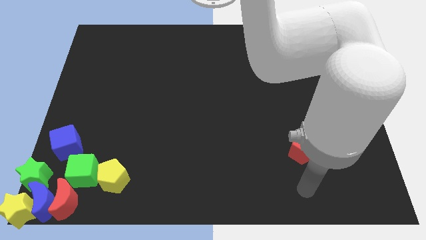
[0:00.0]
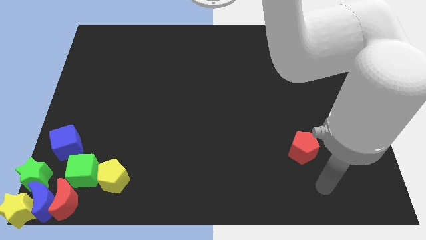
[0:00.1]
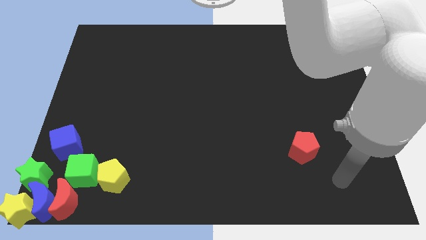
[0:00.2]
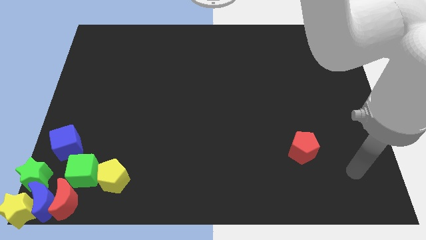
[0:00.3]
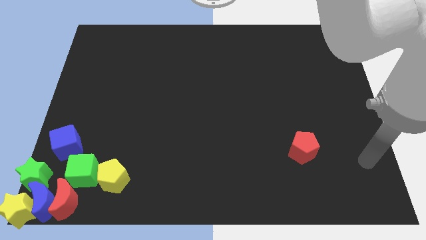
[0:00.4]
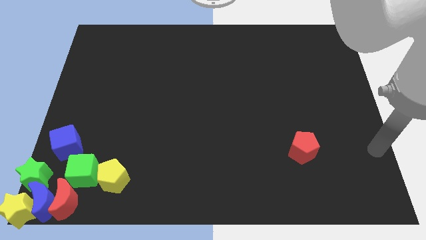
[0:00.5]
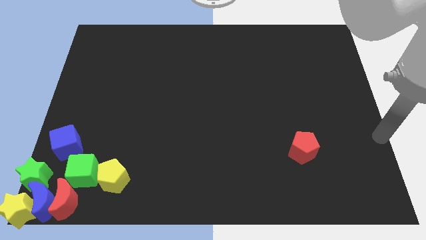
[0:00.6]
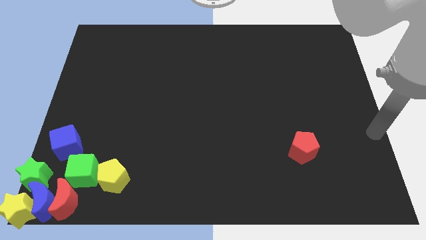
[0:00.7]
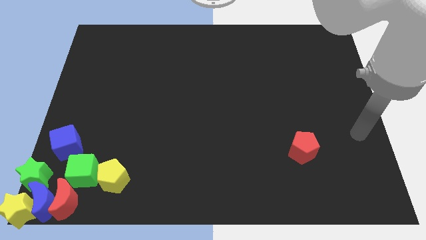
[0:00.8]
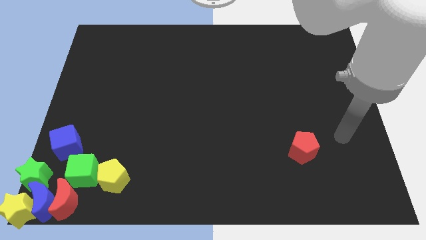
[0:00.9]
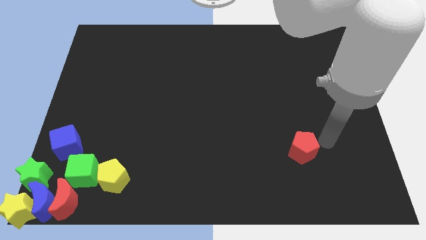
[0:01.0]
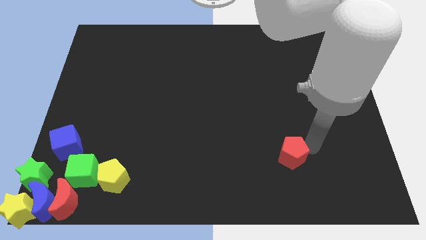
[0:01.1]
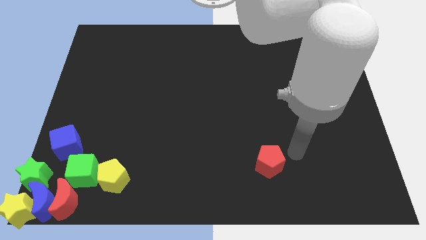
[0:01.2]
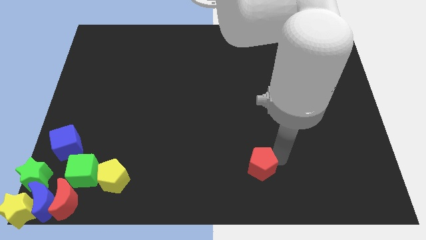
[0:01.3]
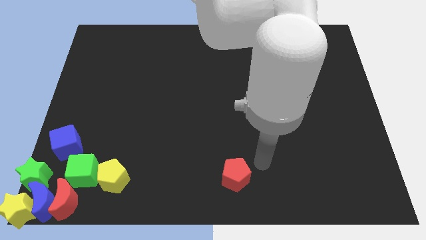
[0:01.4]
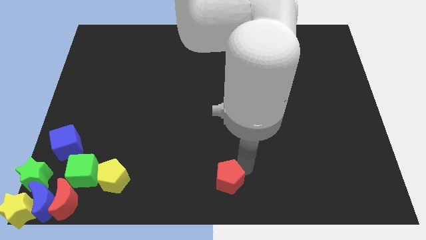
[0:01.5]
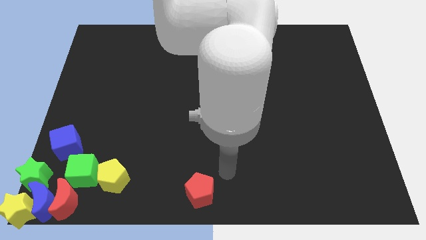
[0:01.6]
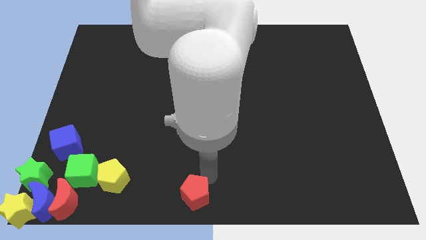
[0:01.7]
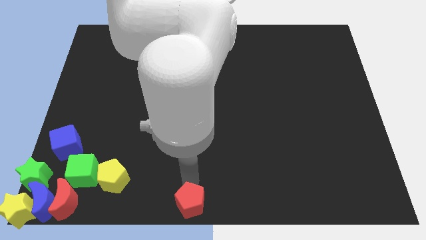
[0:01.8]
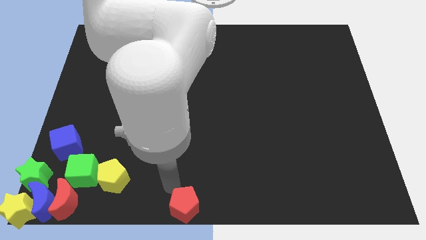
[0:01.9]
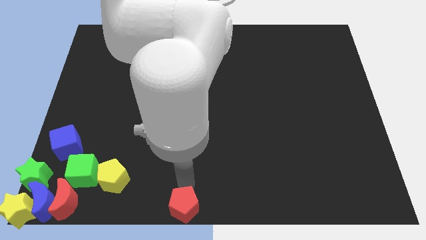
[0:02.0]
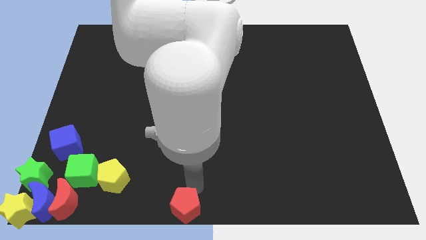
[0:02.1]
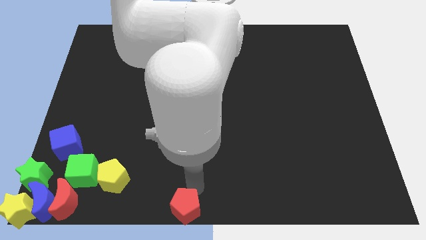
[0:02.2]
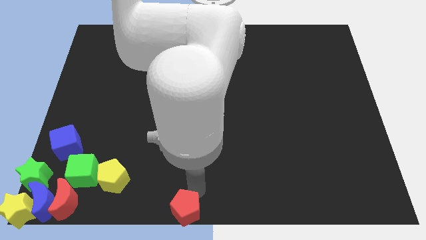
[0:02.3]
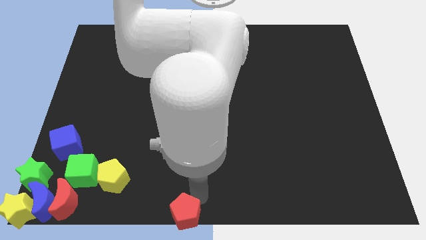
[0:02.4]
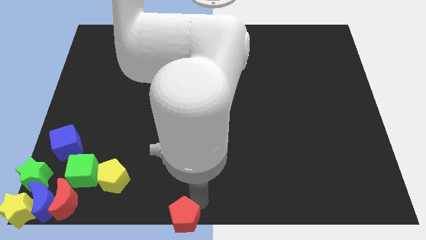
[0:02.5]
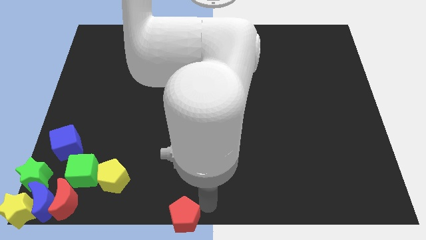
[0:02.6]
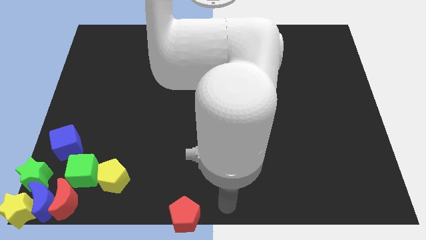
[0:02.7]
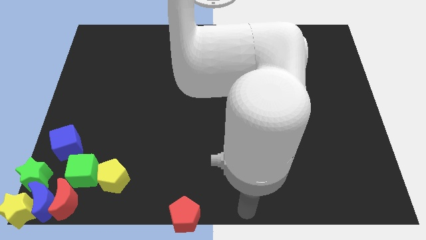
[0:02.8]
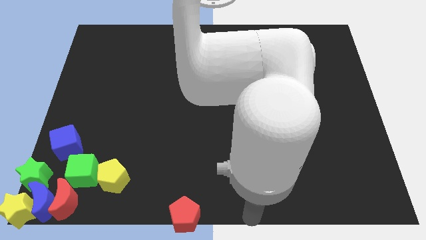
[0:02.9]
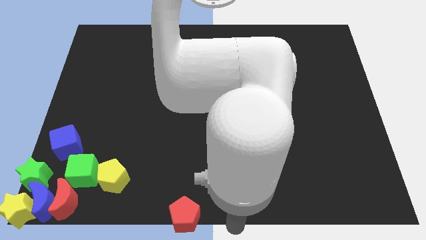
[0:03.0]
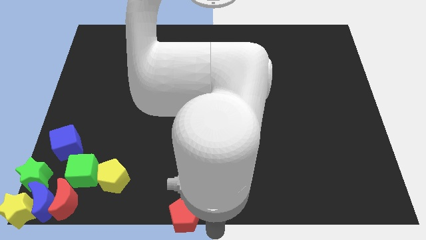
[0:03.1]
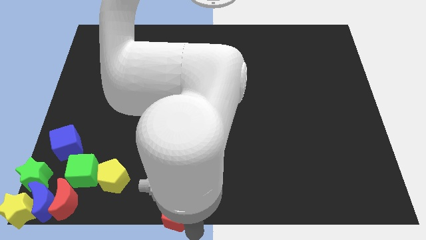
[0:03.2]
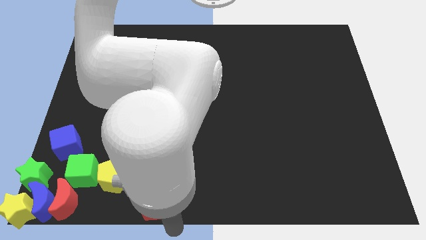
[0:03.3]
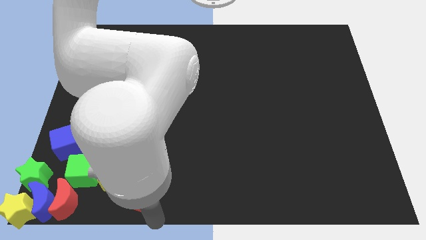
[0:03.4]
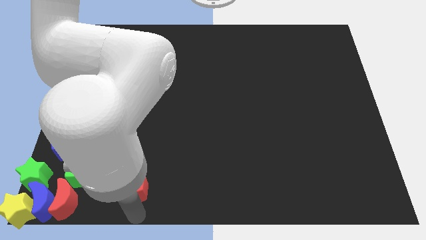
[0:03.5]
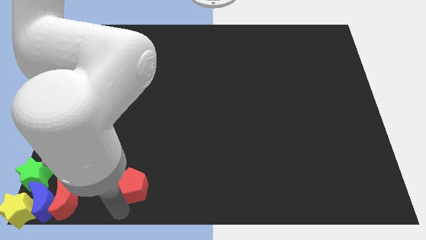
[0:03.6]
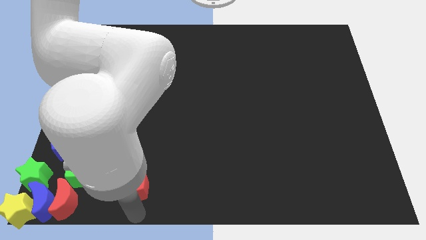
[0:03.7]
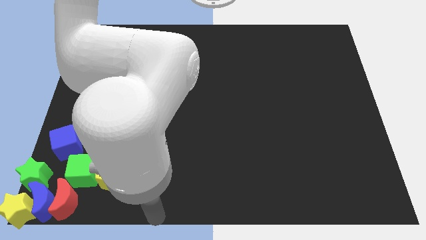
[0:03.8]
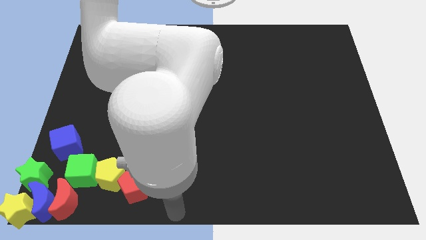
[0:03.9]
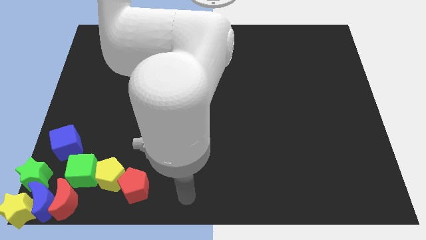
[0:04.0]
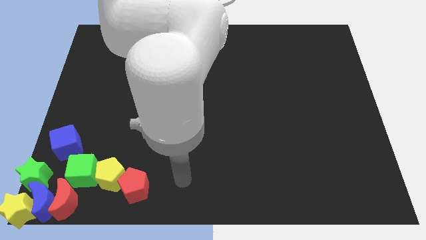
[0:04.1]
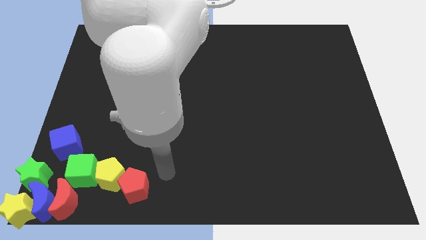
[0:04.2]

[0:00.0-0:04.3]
push the red pentagon into the yellow pentagon

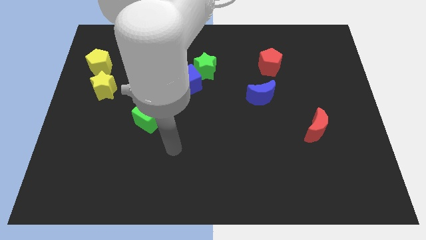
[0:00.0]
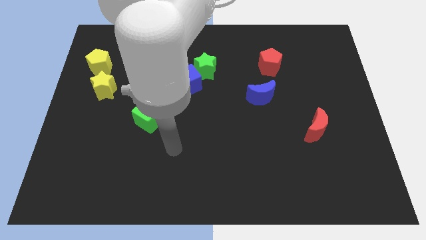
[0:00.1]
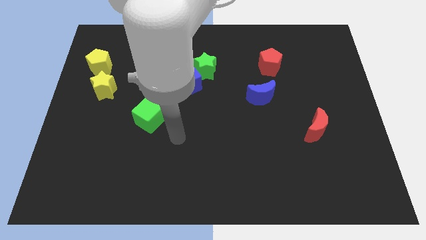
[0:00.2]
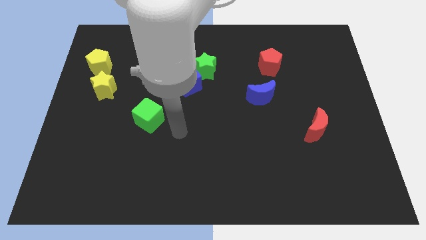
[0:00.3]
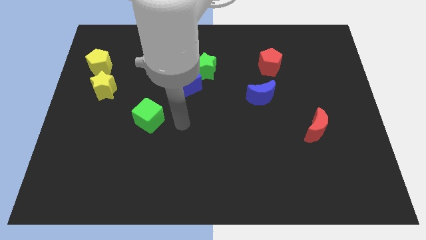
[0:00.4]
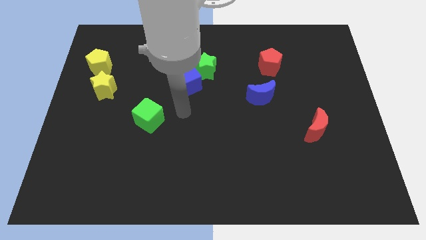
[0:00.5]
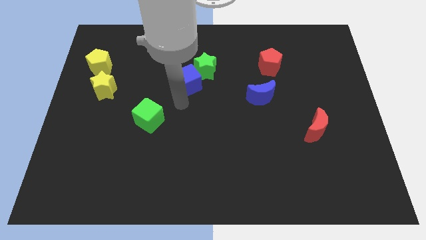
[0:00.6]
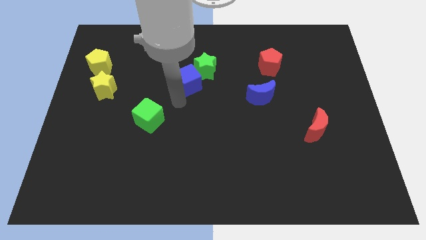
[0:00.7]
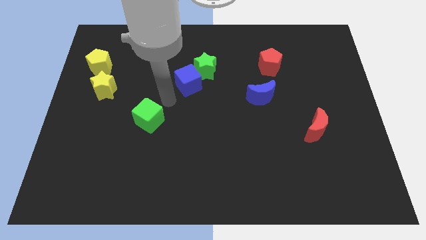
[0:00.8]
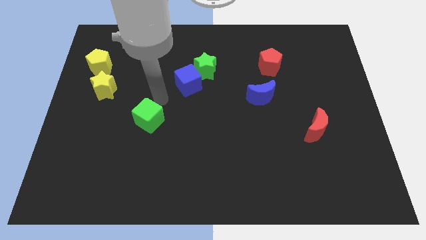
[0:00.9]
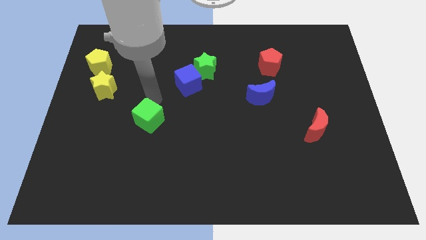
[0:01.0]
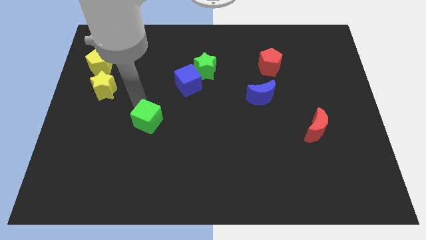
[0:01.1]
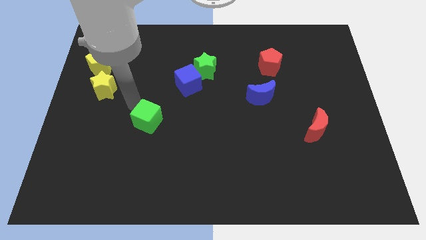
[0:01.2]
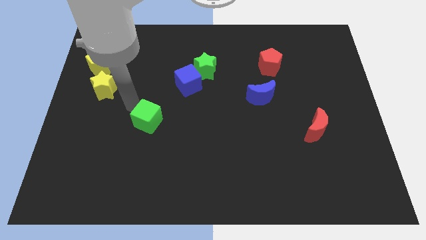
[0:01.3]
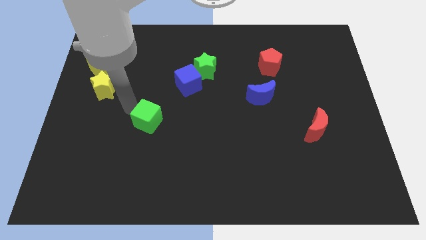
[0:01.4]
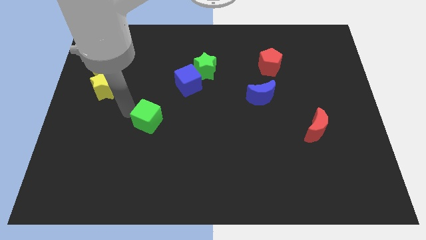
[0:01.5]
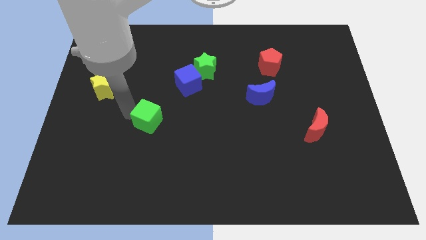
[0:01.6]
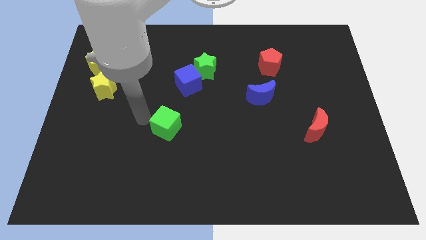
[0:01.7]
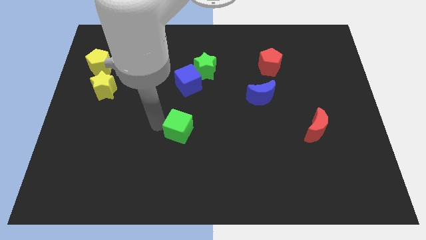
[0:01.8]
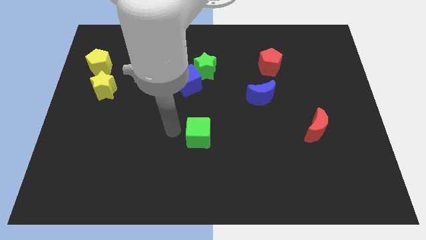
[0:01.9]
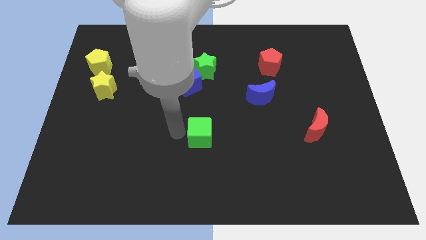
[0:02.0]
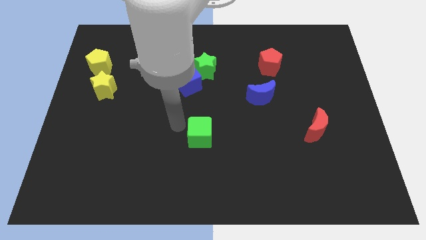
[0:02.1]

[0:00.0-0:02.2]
push the green cube diagnoal to the blue crescent

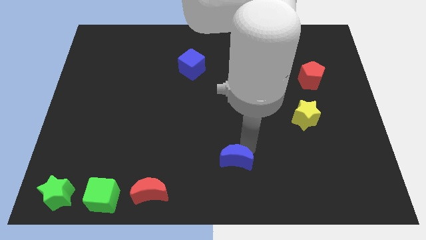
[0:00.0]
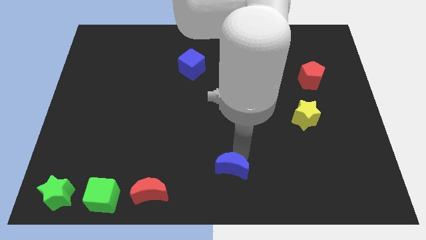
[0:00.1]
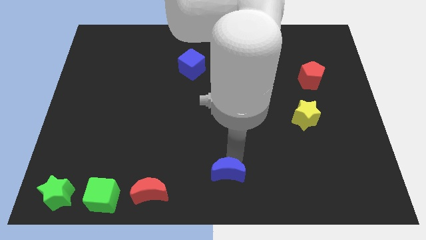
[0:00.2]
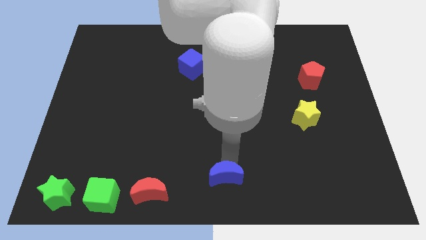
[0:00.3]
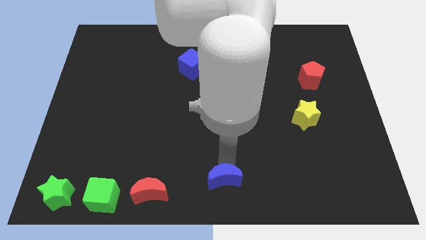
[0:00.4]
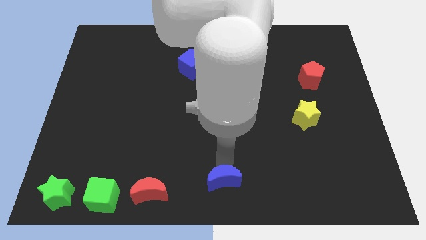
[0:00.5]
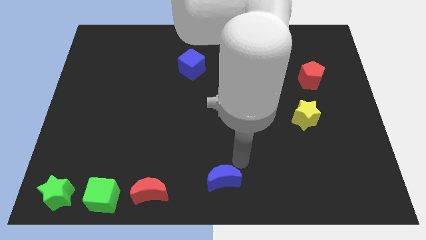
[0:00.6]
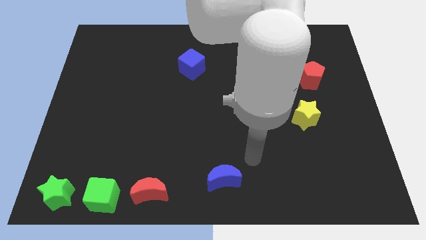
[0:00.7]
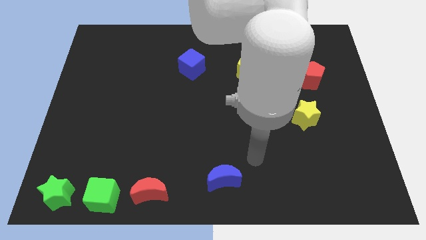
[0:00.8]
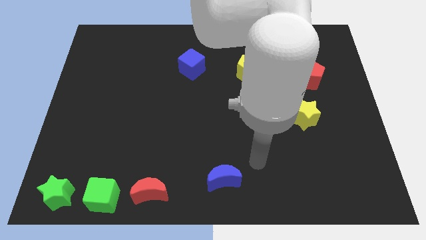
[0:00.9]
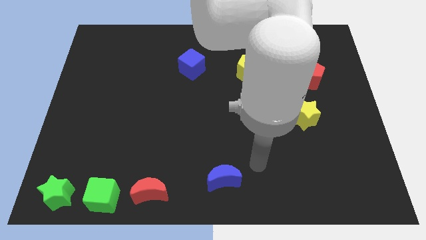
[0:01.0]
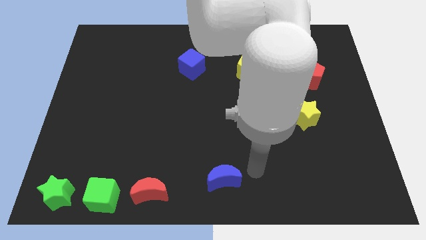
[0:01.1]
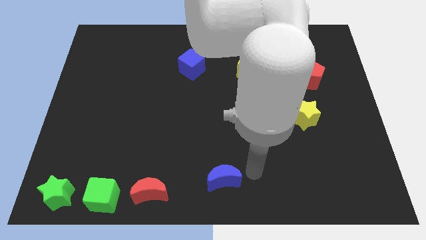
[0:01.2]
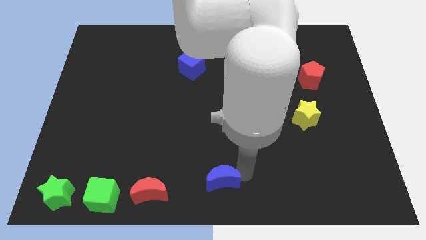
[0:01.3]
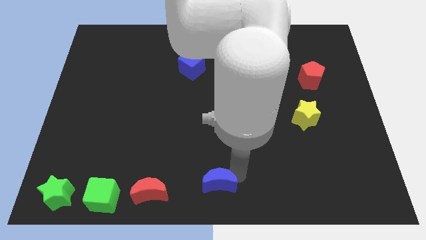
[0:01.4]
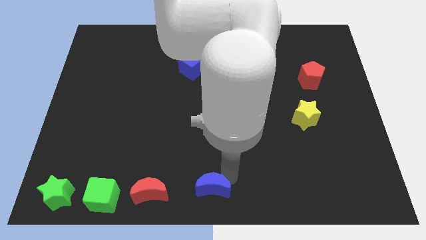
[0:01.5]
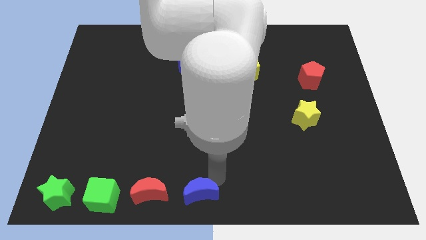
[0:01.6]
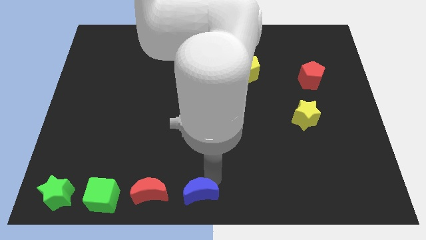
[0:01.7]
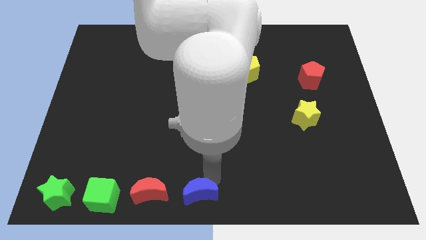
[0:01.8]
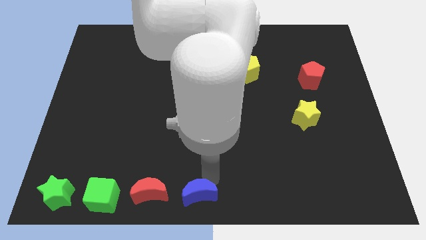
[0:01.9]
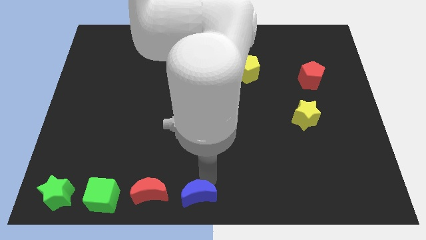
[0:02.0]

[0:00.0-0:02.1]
push the blue crescent to the bottom center of the board

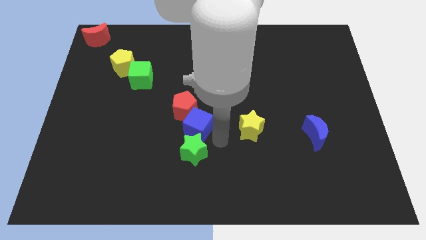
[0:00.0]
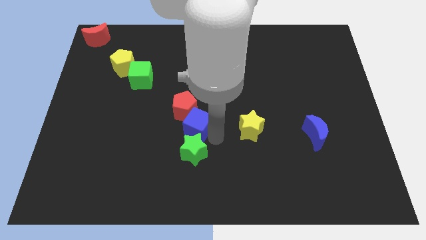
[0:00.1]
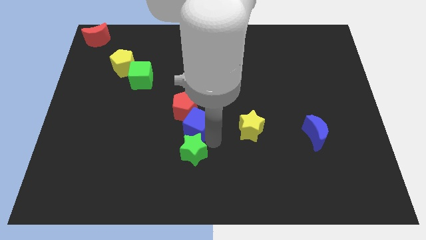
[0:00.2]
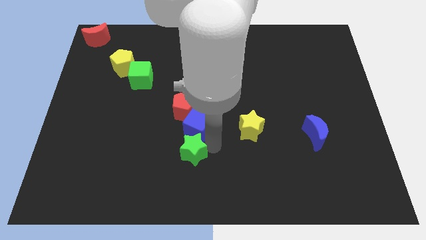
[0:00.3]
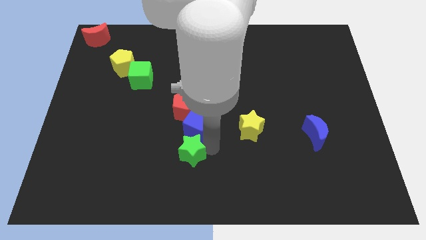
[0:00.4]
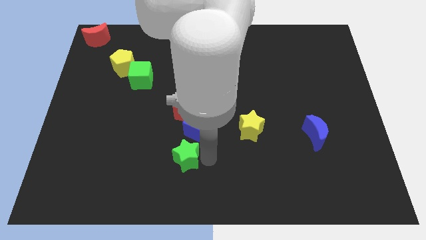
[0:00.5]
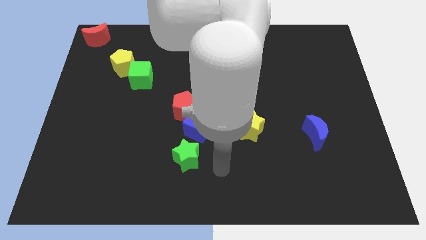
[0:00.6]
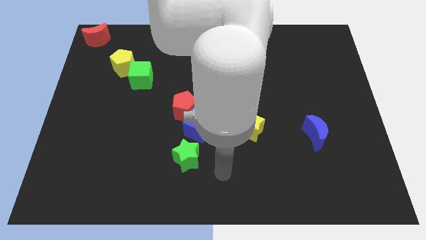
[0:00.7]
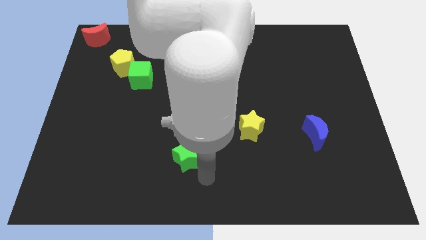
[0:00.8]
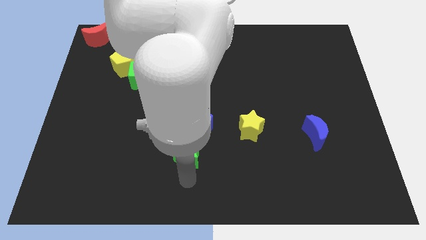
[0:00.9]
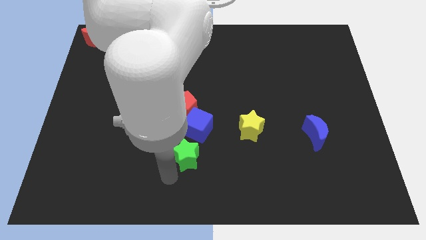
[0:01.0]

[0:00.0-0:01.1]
slide green star slightly to the left
